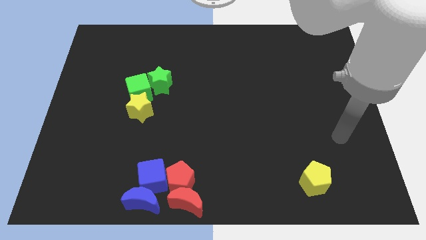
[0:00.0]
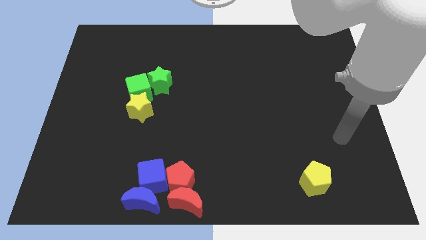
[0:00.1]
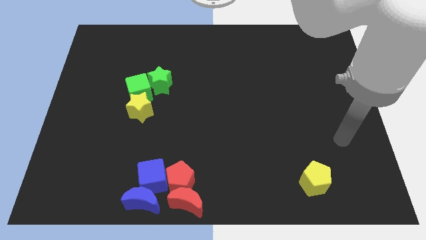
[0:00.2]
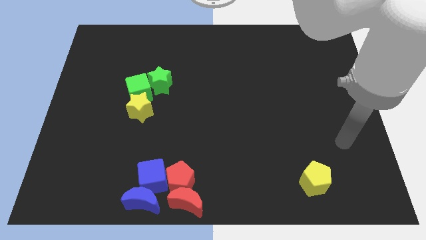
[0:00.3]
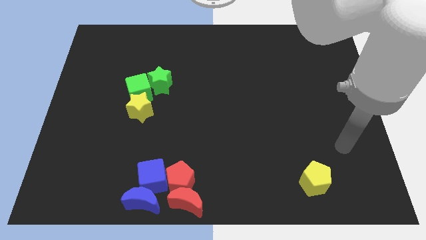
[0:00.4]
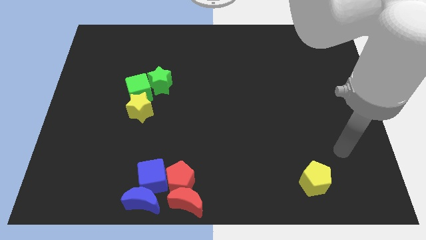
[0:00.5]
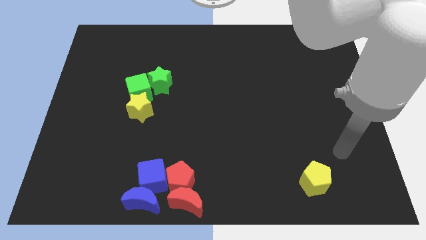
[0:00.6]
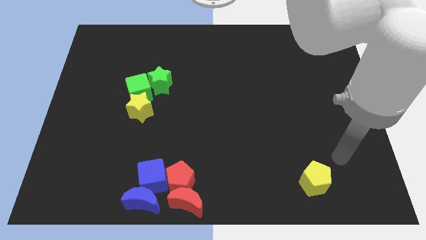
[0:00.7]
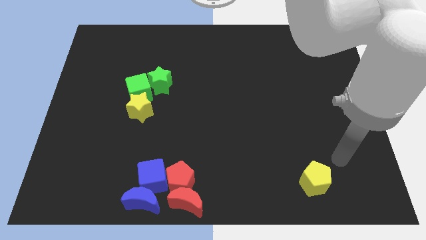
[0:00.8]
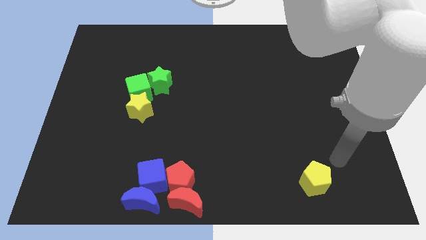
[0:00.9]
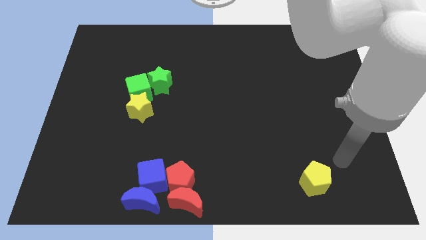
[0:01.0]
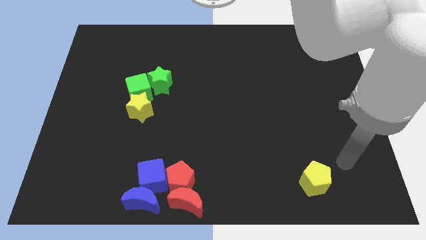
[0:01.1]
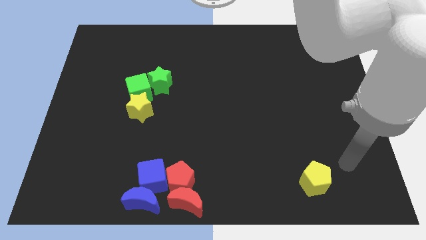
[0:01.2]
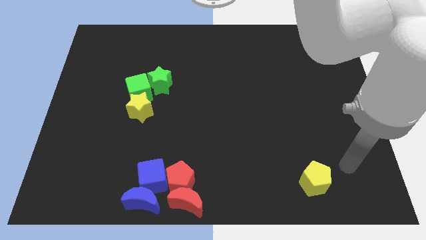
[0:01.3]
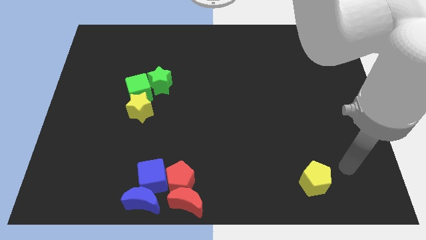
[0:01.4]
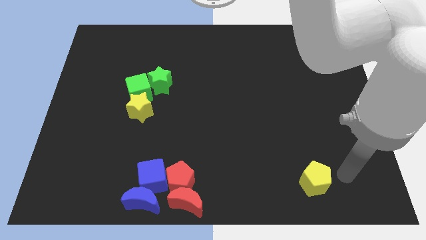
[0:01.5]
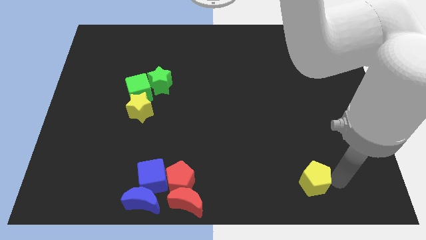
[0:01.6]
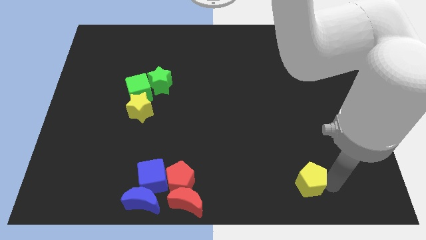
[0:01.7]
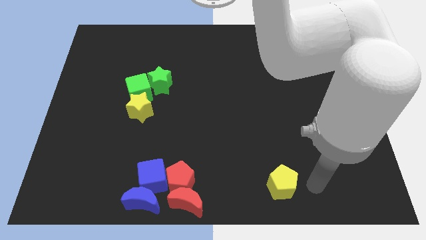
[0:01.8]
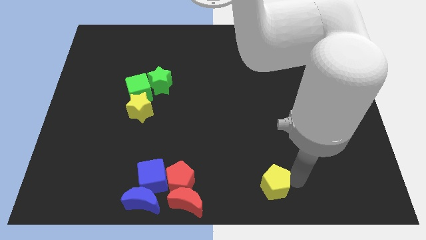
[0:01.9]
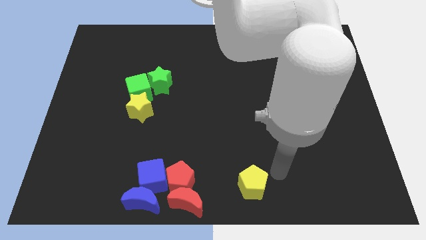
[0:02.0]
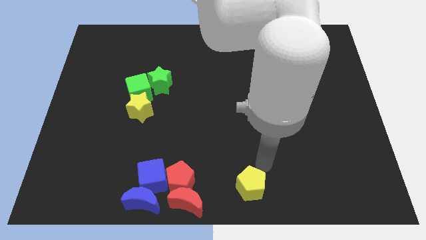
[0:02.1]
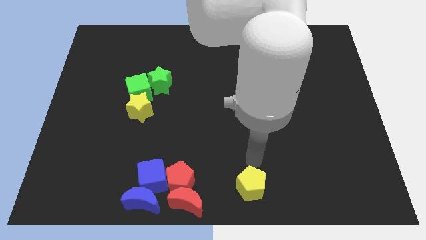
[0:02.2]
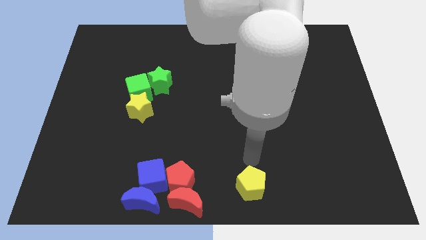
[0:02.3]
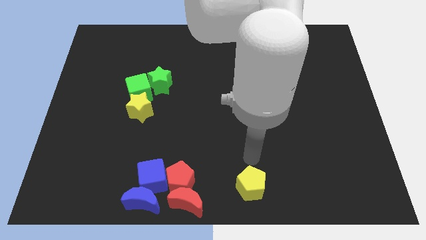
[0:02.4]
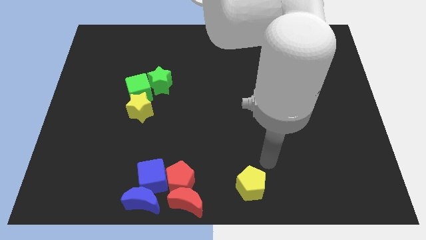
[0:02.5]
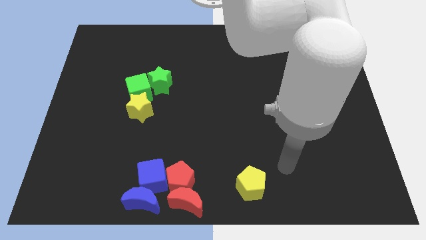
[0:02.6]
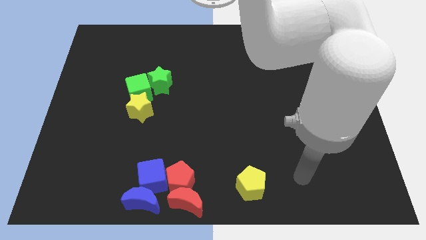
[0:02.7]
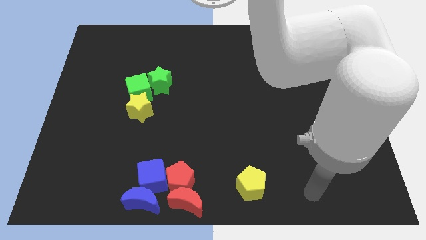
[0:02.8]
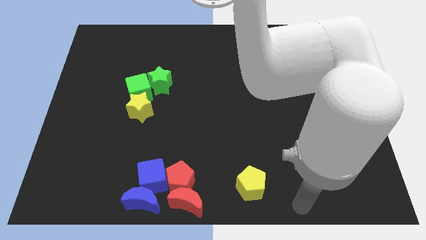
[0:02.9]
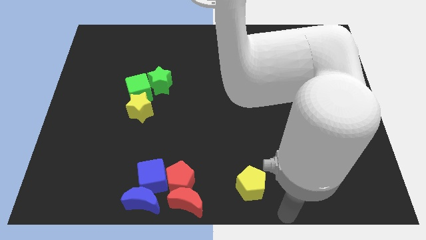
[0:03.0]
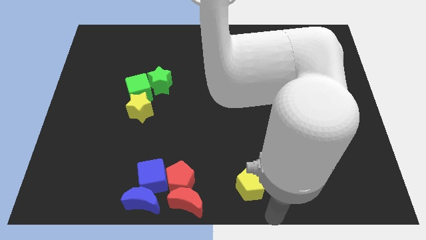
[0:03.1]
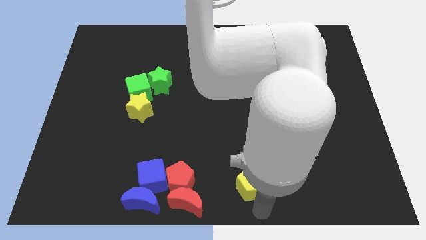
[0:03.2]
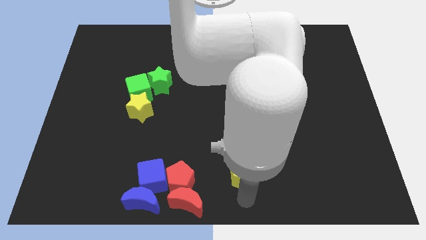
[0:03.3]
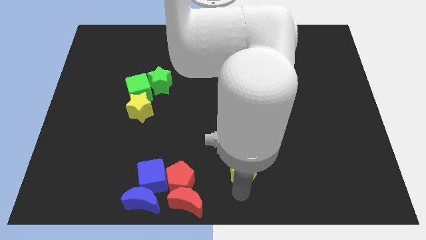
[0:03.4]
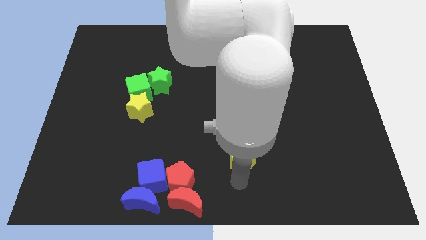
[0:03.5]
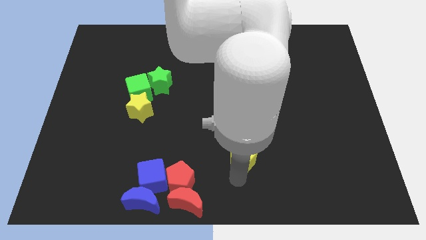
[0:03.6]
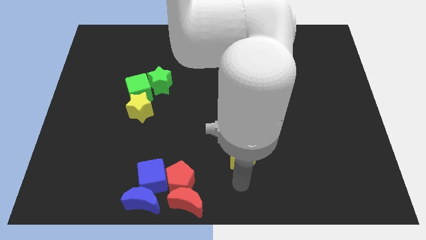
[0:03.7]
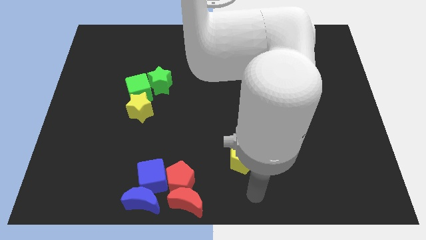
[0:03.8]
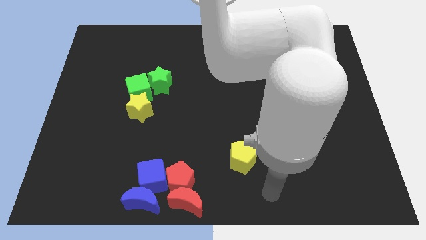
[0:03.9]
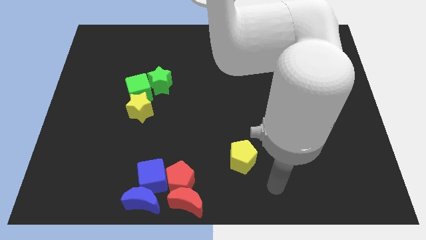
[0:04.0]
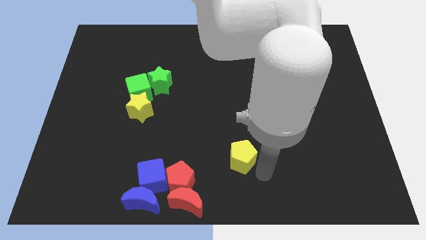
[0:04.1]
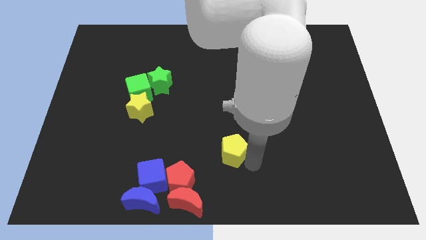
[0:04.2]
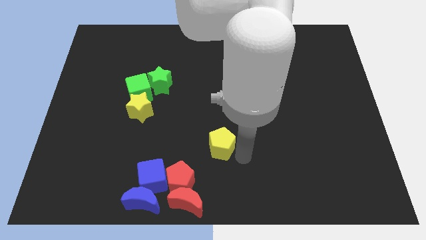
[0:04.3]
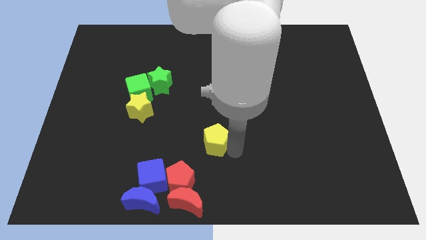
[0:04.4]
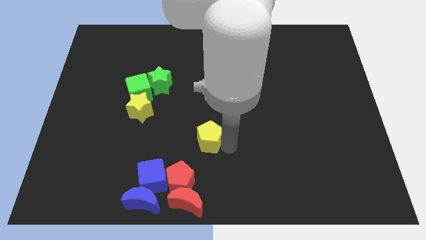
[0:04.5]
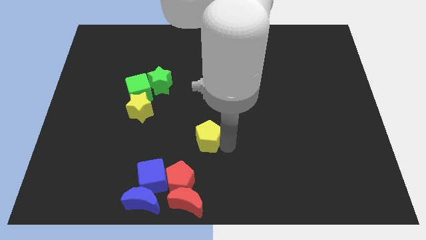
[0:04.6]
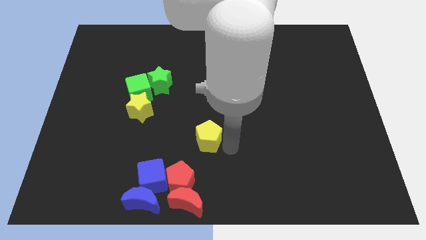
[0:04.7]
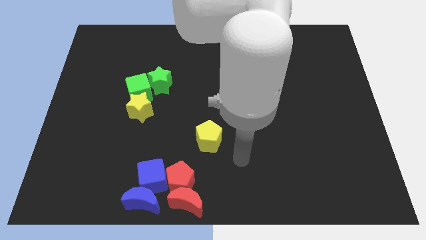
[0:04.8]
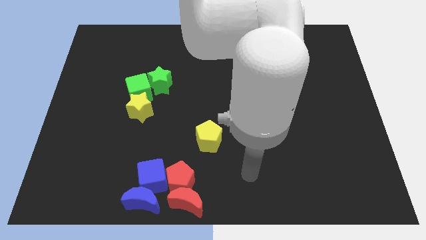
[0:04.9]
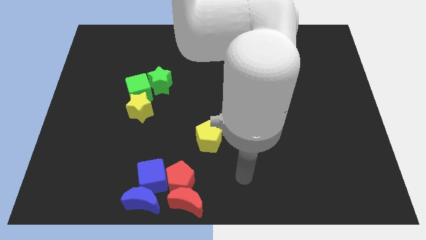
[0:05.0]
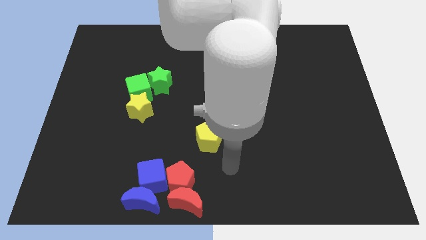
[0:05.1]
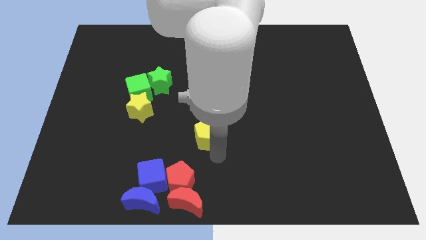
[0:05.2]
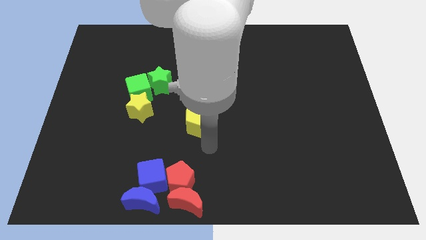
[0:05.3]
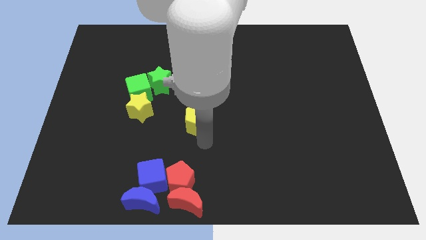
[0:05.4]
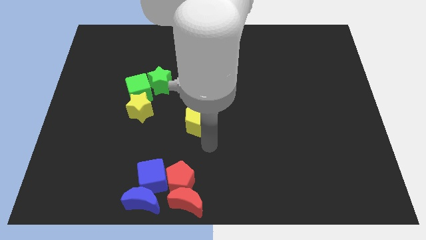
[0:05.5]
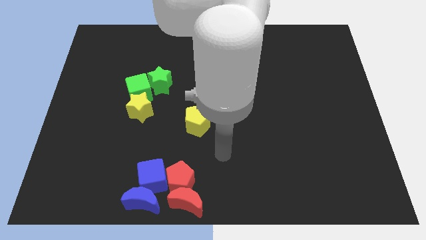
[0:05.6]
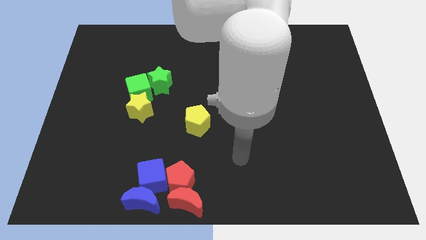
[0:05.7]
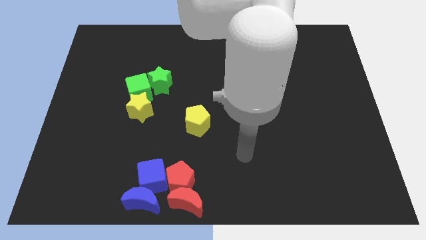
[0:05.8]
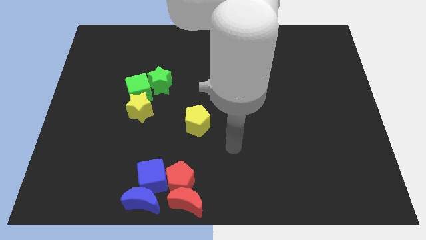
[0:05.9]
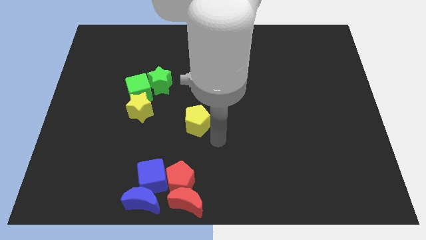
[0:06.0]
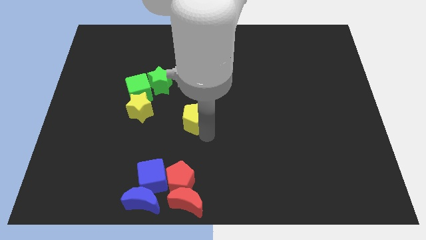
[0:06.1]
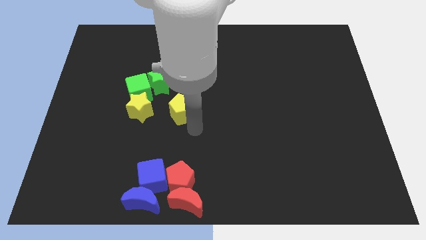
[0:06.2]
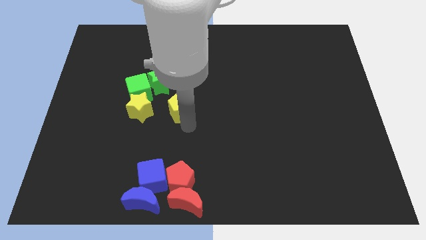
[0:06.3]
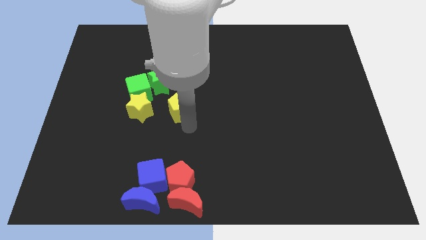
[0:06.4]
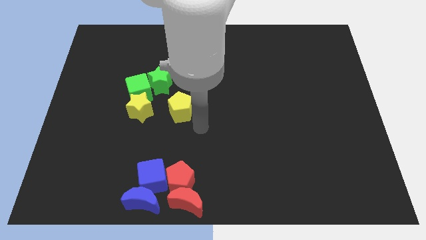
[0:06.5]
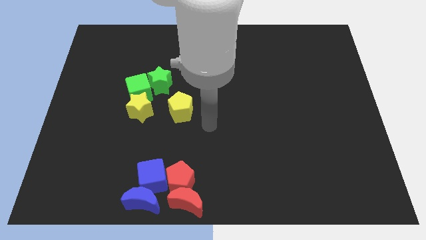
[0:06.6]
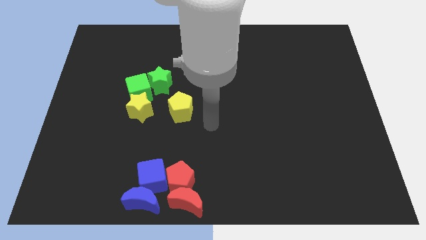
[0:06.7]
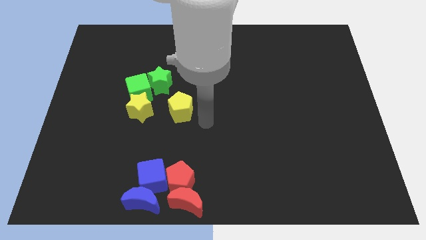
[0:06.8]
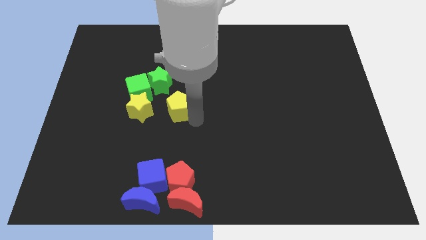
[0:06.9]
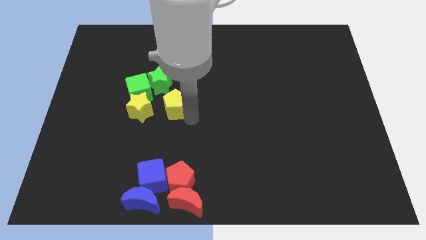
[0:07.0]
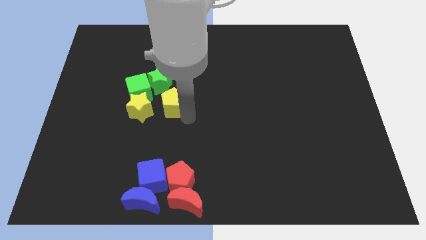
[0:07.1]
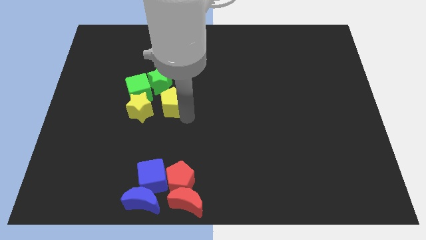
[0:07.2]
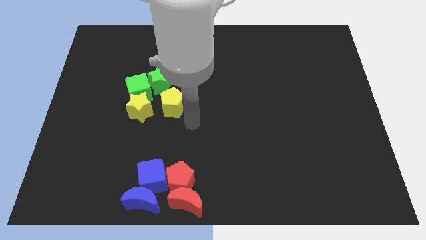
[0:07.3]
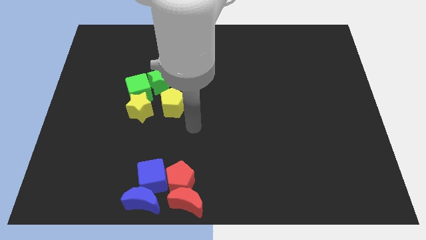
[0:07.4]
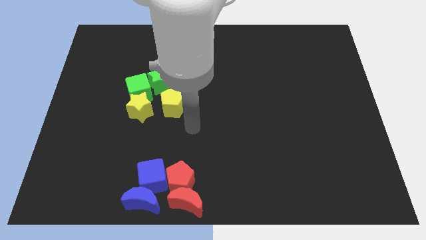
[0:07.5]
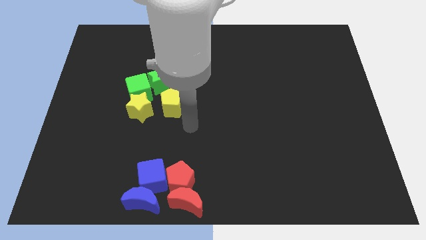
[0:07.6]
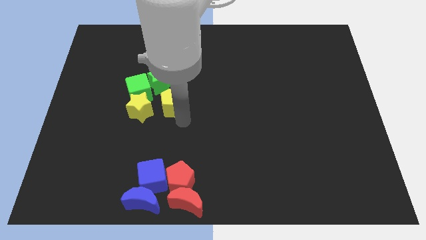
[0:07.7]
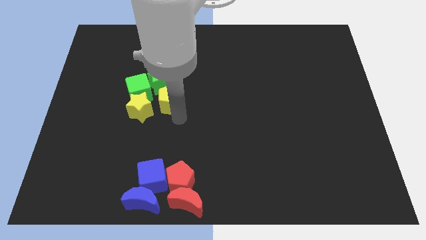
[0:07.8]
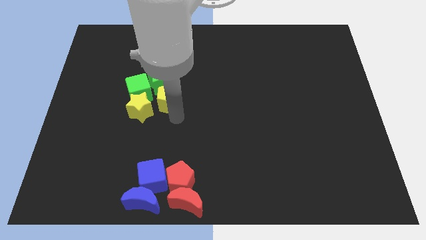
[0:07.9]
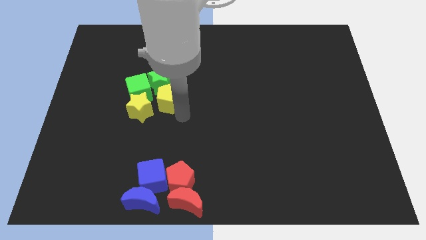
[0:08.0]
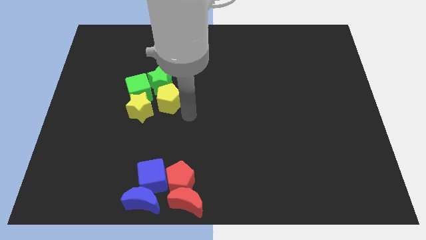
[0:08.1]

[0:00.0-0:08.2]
place yellow pentagon close to green star

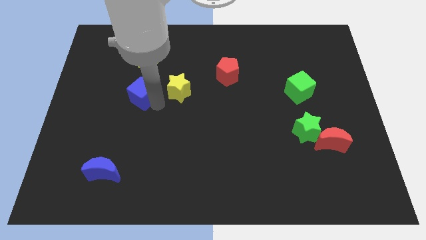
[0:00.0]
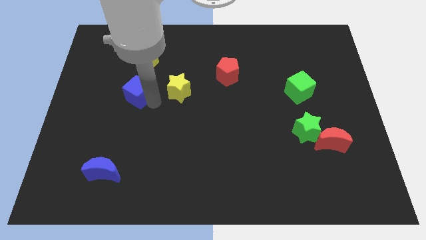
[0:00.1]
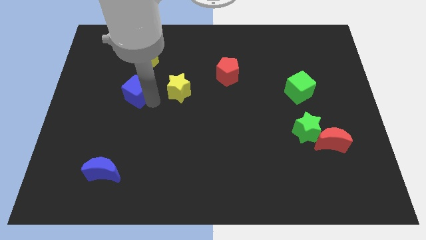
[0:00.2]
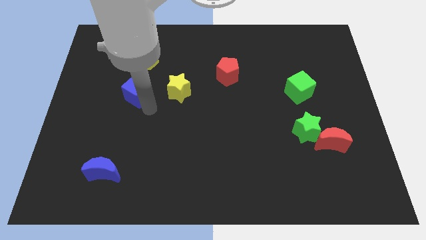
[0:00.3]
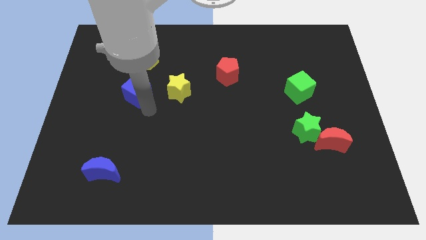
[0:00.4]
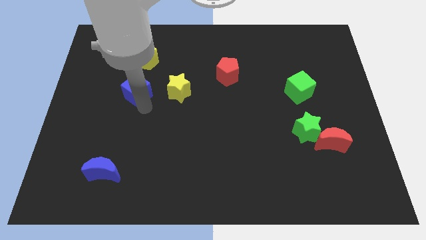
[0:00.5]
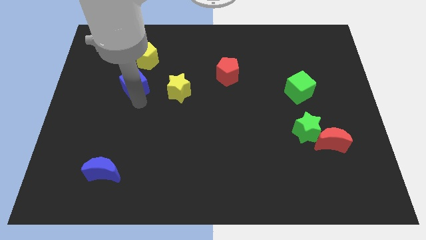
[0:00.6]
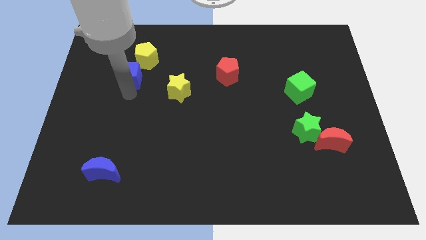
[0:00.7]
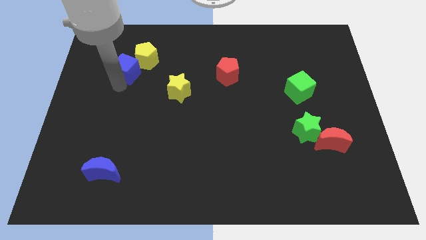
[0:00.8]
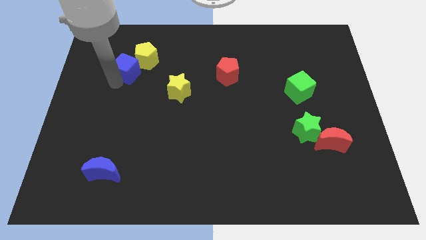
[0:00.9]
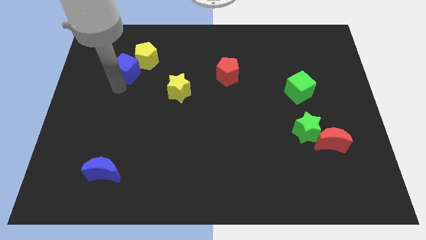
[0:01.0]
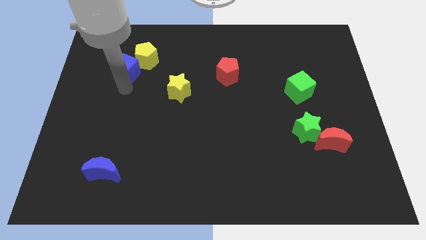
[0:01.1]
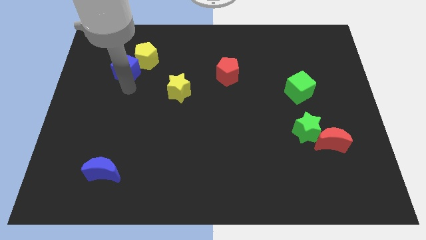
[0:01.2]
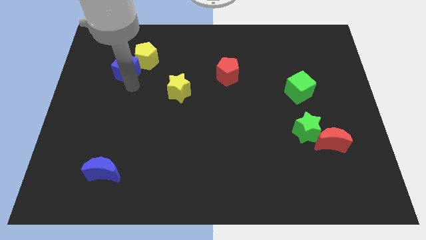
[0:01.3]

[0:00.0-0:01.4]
move the blue cube into the yellow pentagon
